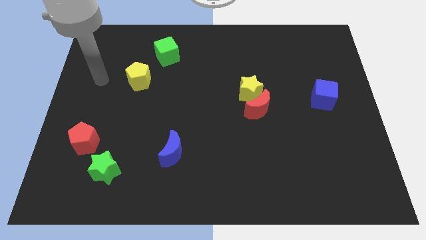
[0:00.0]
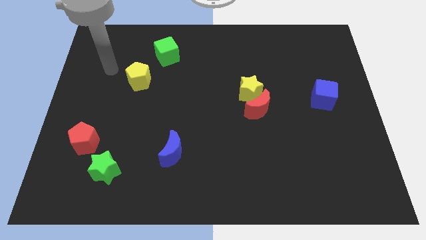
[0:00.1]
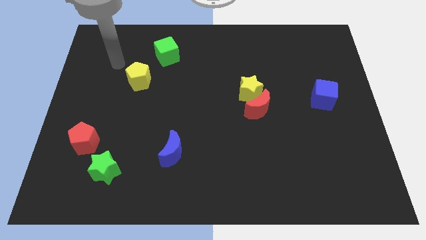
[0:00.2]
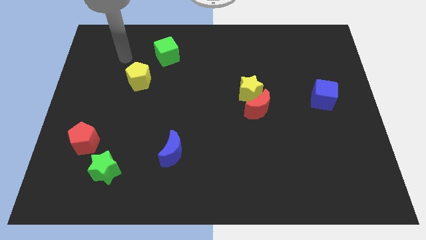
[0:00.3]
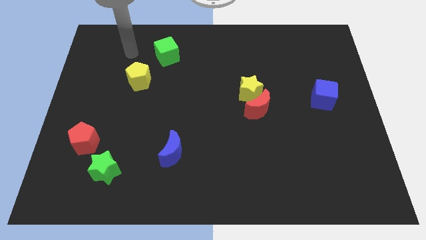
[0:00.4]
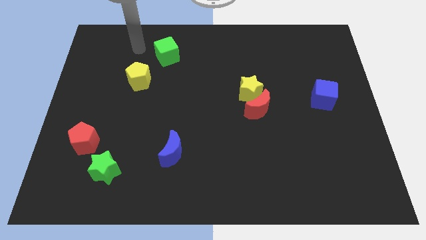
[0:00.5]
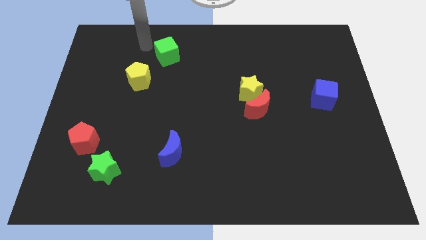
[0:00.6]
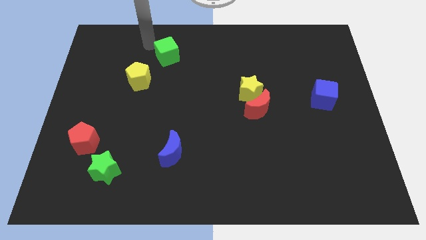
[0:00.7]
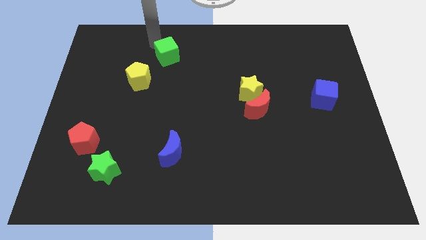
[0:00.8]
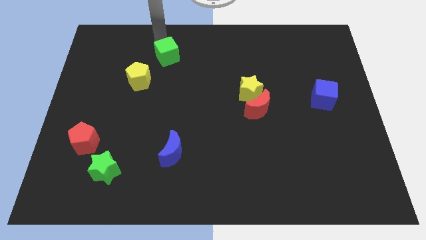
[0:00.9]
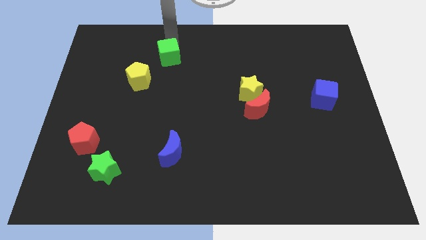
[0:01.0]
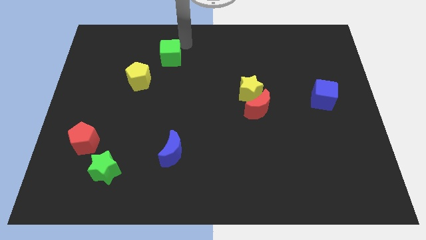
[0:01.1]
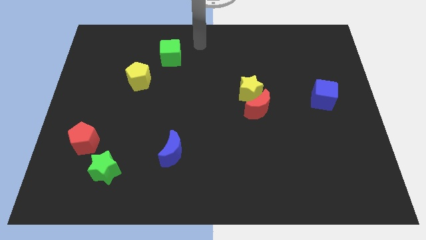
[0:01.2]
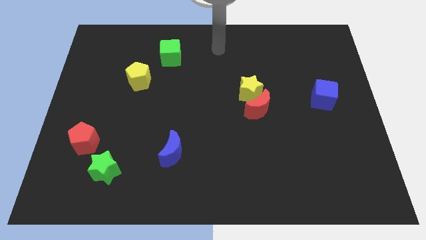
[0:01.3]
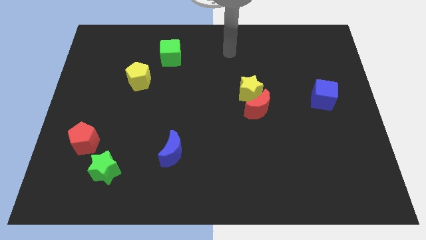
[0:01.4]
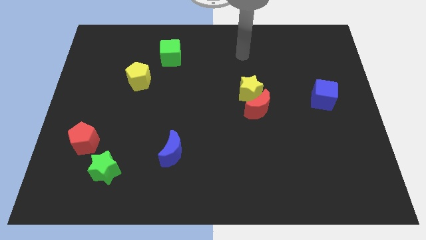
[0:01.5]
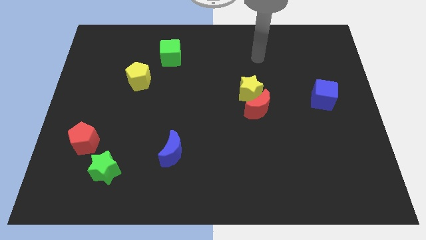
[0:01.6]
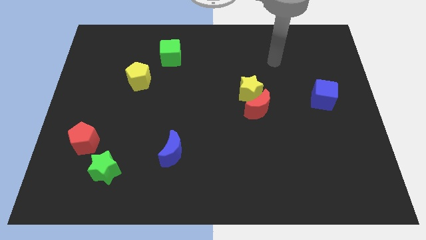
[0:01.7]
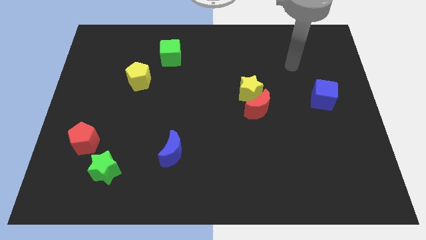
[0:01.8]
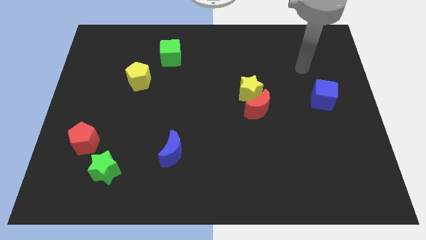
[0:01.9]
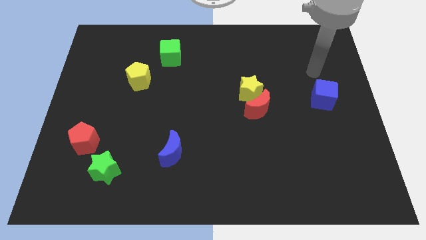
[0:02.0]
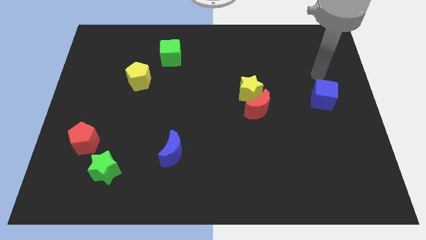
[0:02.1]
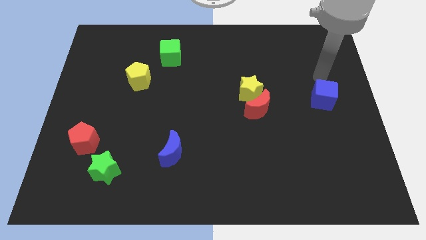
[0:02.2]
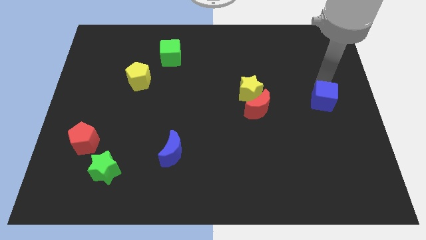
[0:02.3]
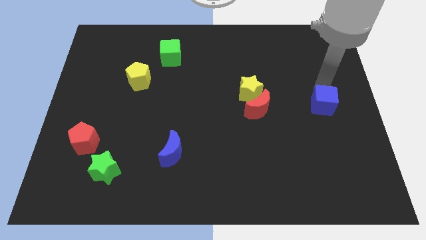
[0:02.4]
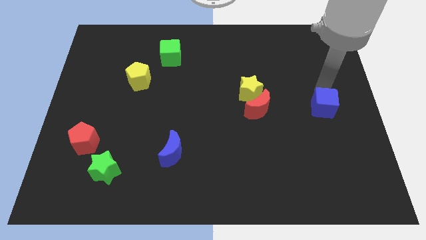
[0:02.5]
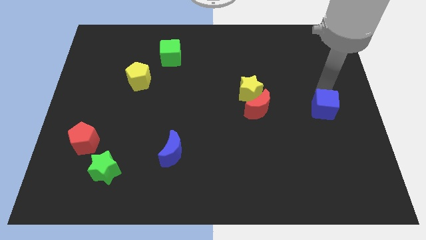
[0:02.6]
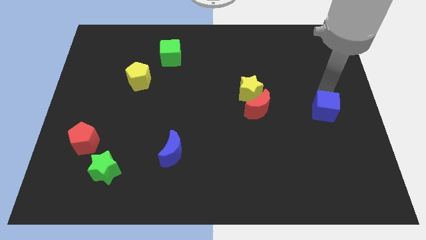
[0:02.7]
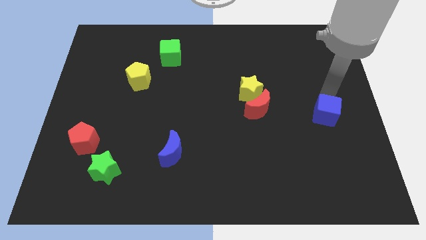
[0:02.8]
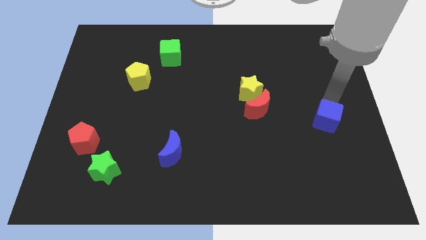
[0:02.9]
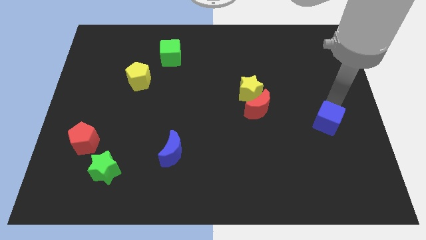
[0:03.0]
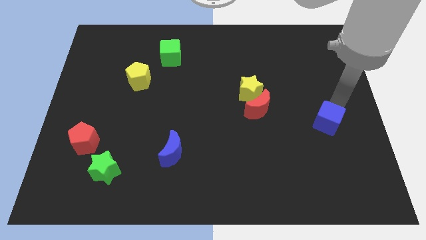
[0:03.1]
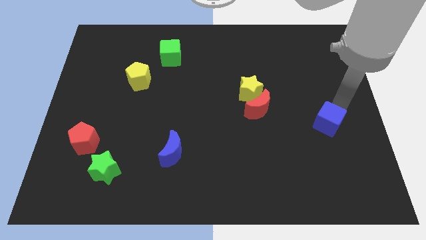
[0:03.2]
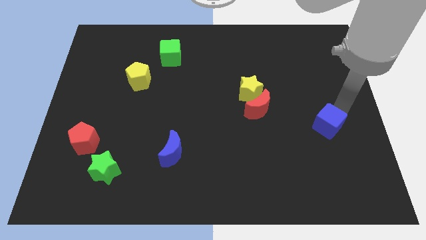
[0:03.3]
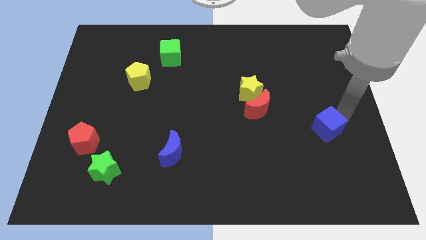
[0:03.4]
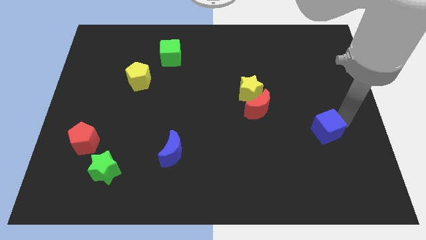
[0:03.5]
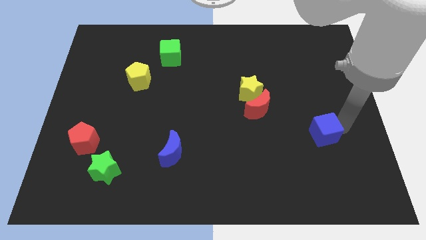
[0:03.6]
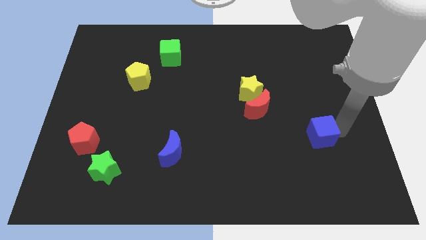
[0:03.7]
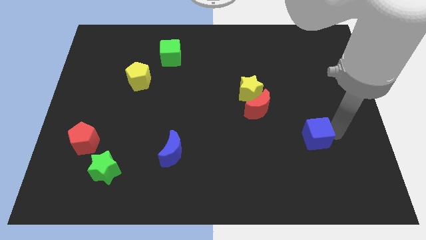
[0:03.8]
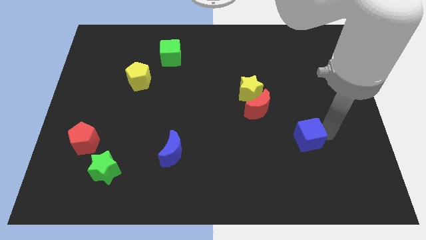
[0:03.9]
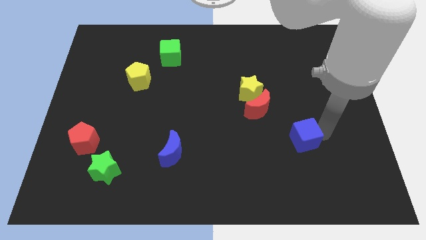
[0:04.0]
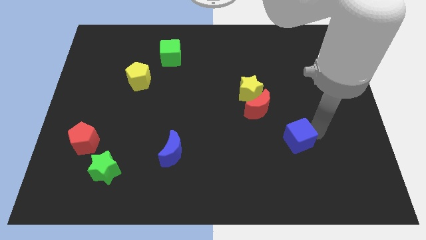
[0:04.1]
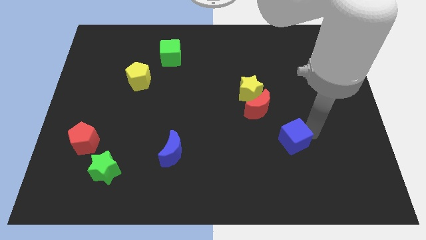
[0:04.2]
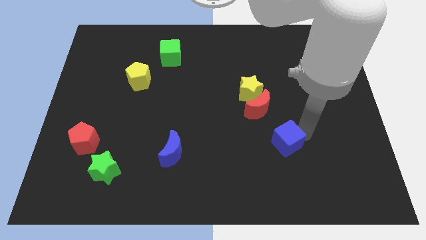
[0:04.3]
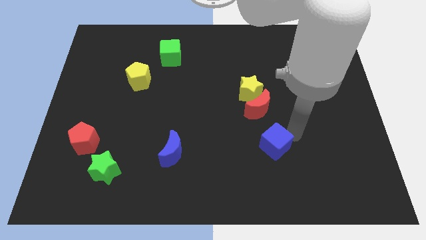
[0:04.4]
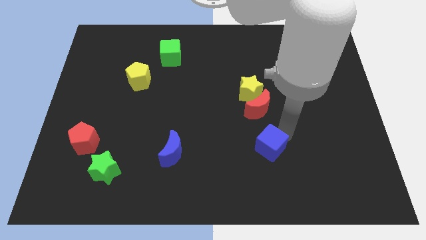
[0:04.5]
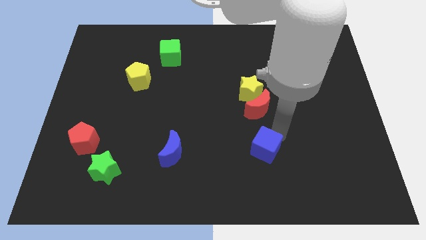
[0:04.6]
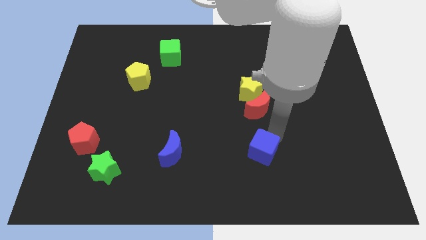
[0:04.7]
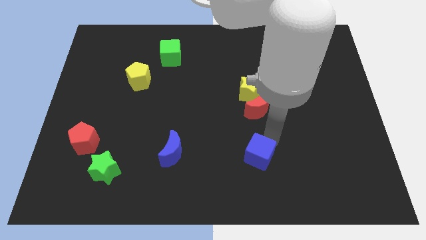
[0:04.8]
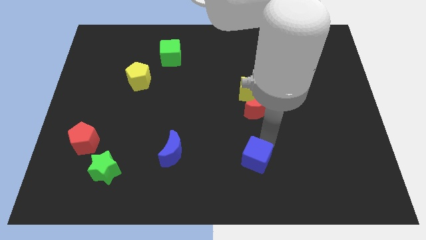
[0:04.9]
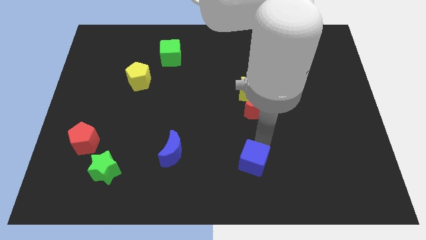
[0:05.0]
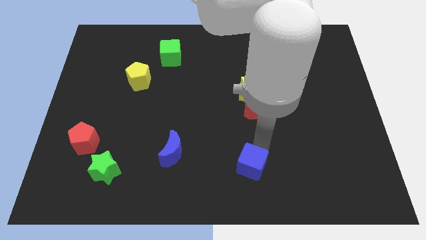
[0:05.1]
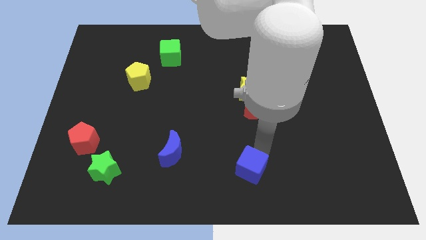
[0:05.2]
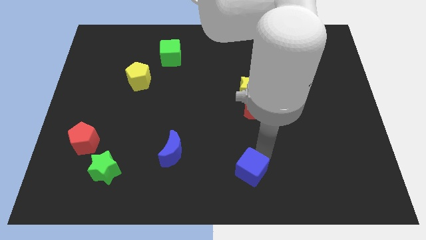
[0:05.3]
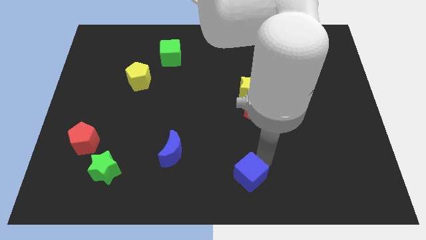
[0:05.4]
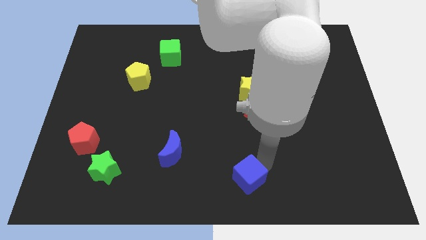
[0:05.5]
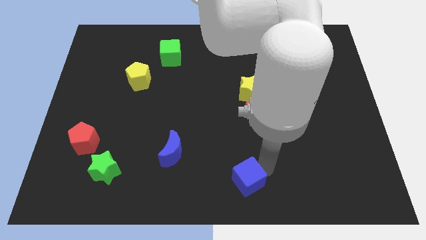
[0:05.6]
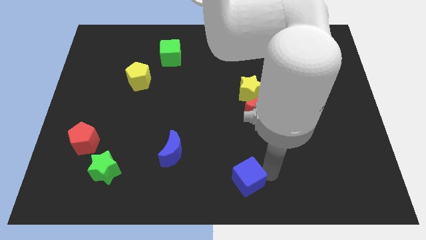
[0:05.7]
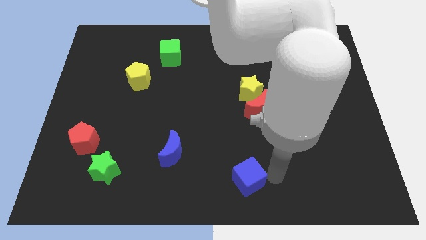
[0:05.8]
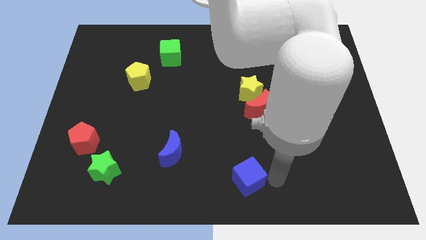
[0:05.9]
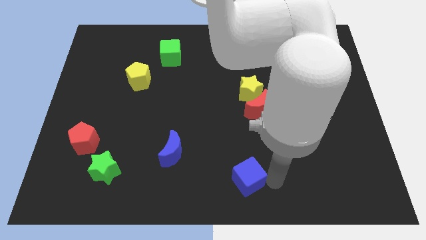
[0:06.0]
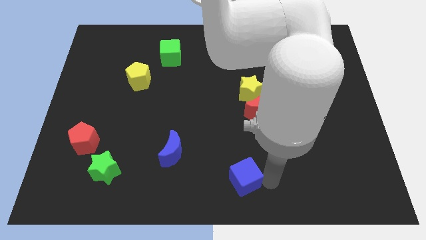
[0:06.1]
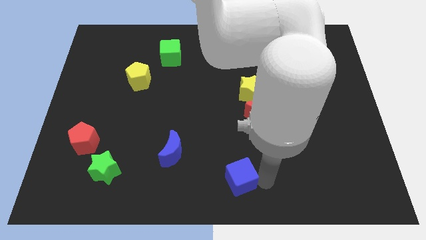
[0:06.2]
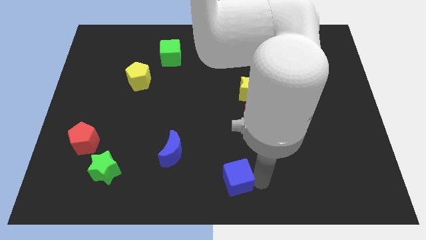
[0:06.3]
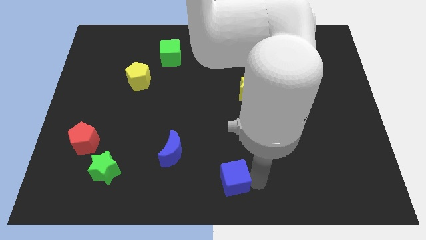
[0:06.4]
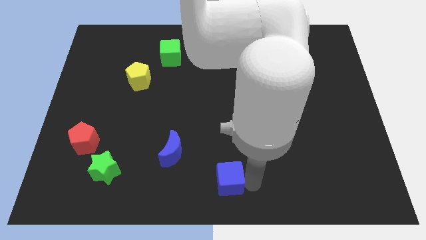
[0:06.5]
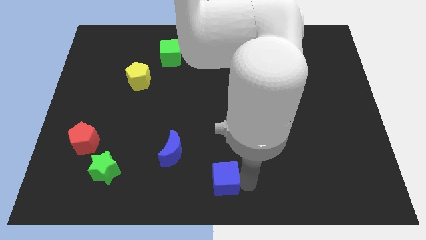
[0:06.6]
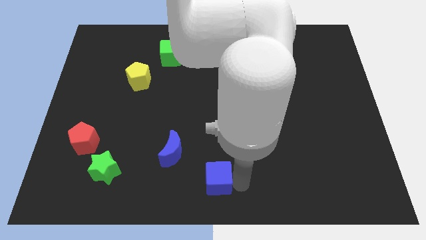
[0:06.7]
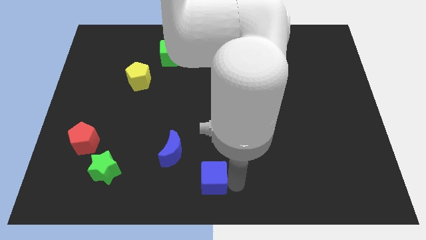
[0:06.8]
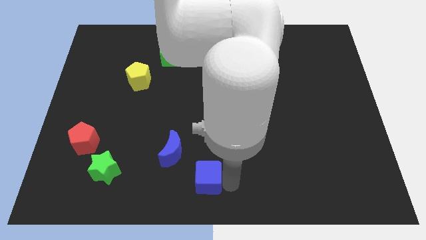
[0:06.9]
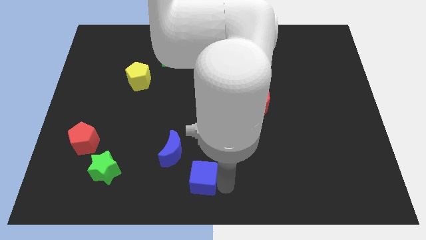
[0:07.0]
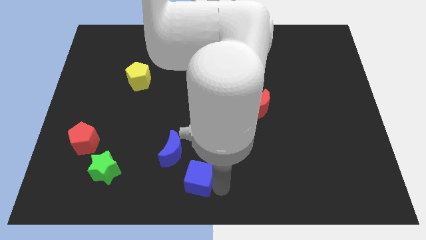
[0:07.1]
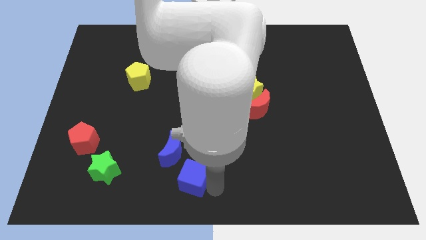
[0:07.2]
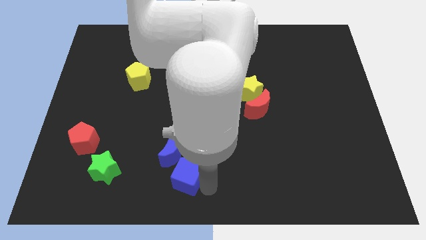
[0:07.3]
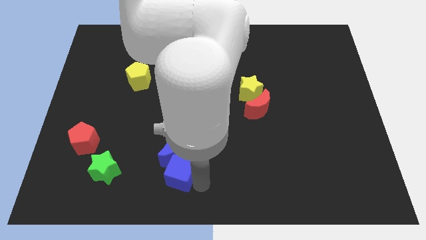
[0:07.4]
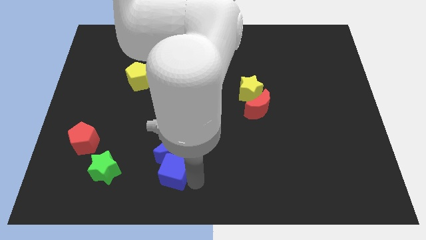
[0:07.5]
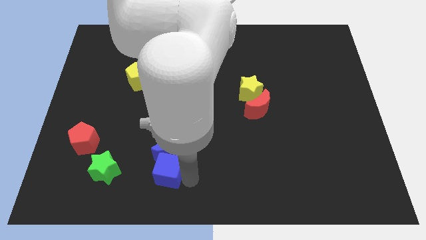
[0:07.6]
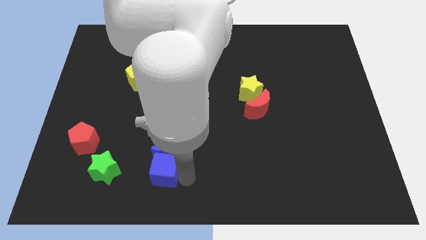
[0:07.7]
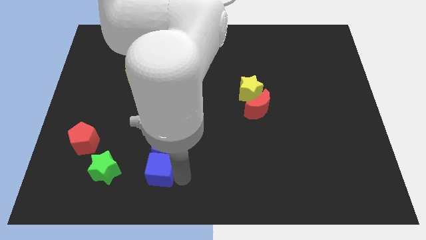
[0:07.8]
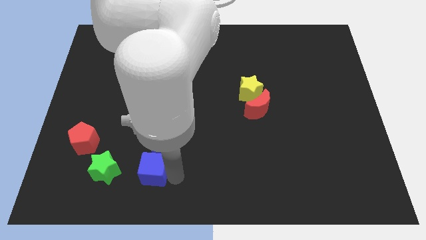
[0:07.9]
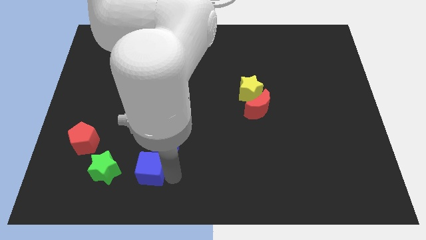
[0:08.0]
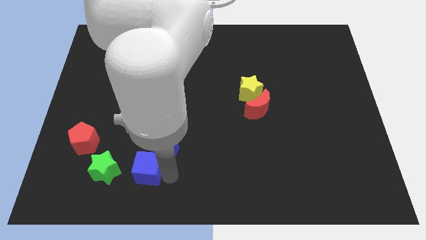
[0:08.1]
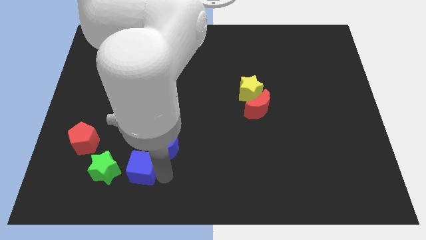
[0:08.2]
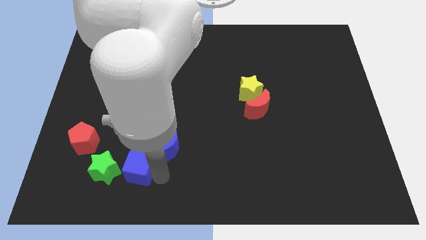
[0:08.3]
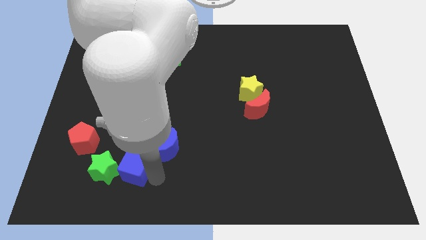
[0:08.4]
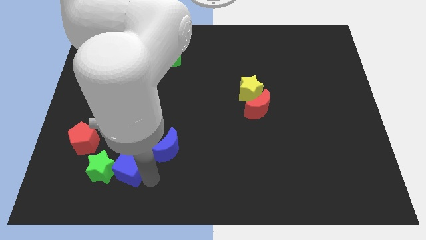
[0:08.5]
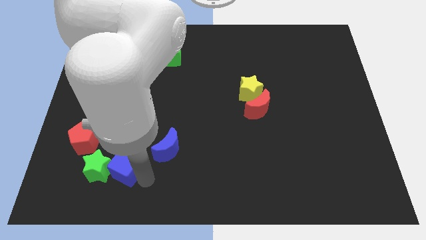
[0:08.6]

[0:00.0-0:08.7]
push the blue cube close to the green star
